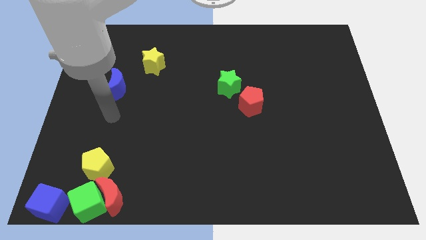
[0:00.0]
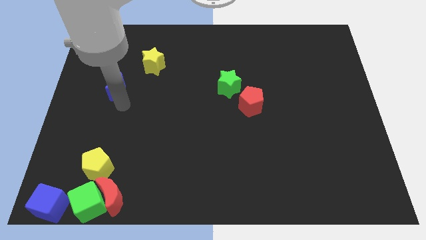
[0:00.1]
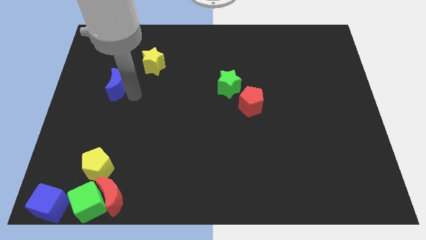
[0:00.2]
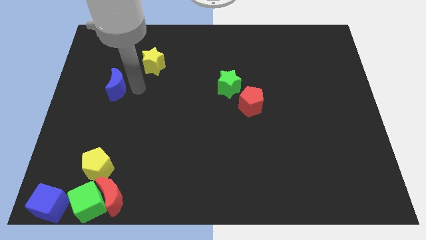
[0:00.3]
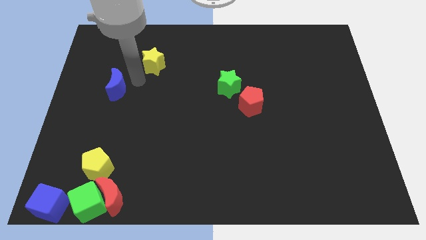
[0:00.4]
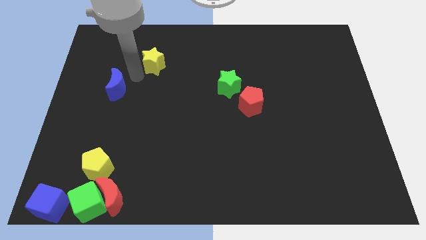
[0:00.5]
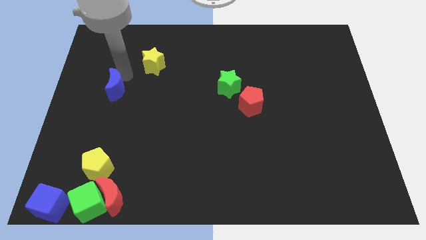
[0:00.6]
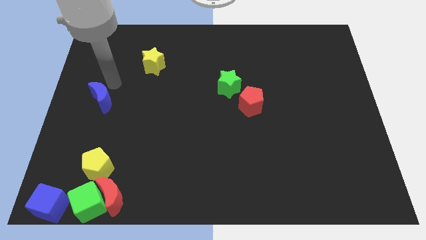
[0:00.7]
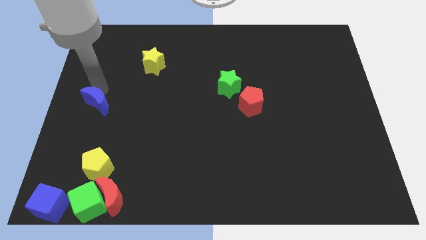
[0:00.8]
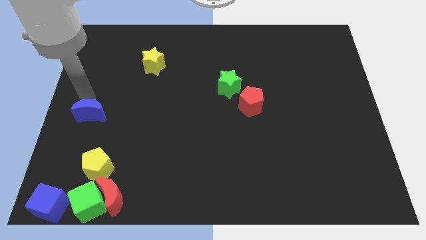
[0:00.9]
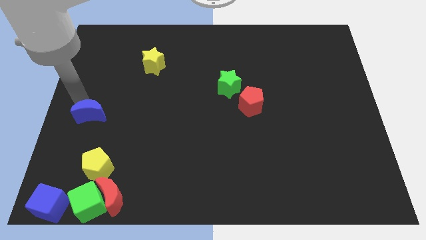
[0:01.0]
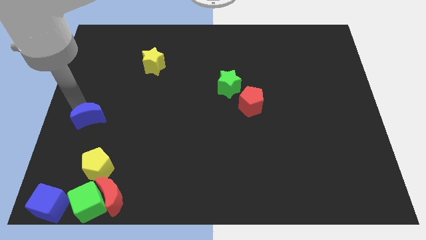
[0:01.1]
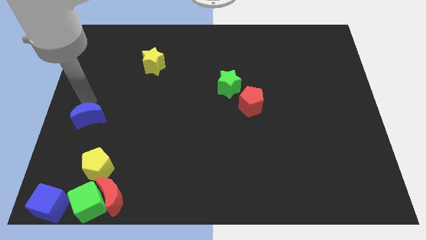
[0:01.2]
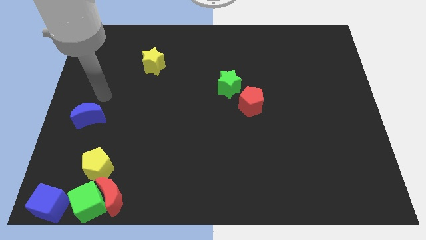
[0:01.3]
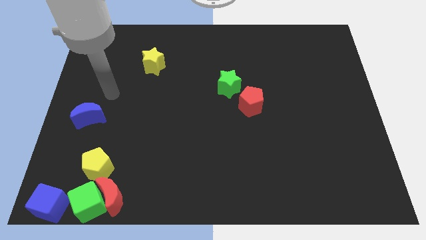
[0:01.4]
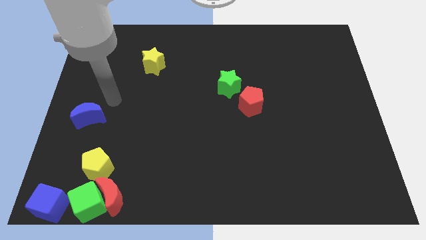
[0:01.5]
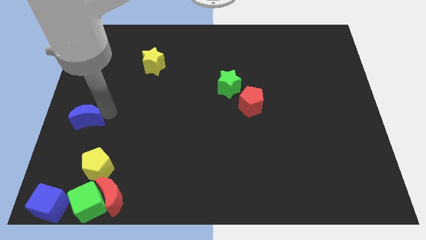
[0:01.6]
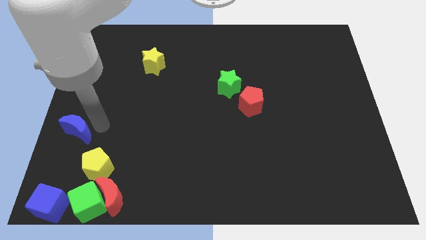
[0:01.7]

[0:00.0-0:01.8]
put the blue moon diagonally top left to the yellow pentagon

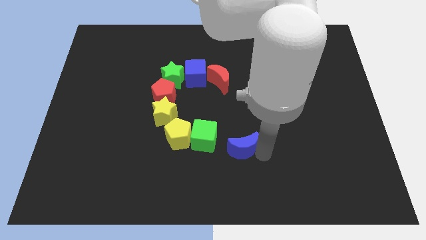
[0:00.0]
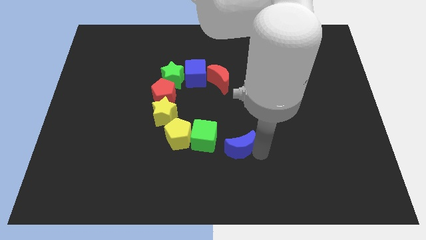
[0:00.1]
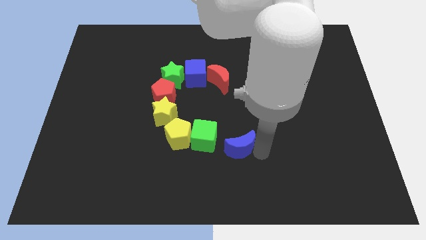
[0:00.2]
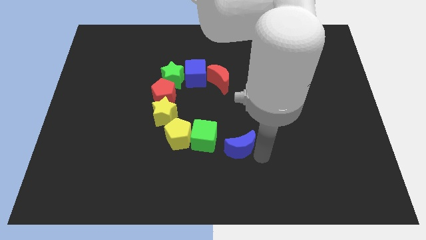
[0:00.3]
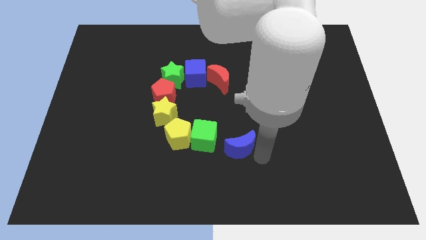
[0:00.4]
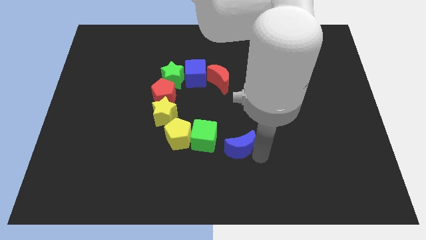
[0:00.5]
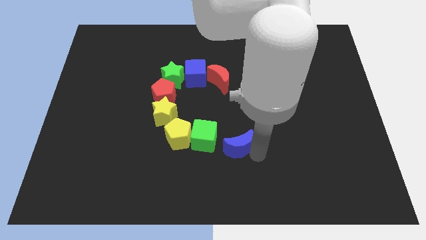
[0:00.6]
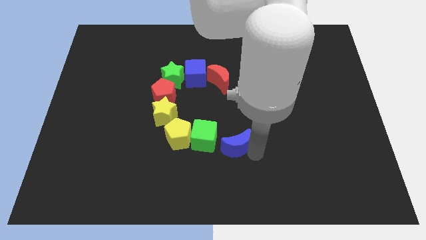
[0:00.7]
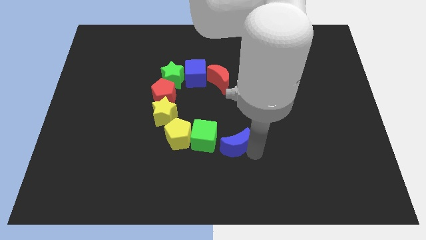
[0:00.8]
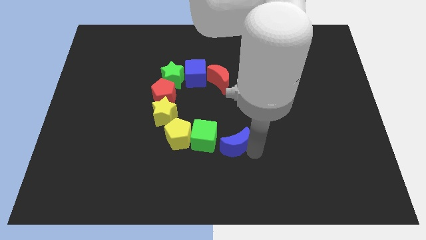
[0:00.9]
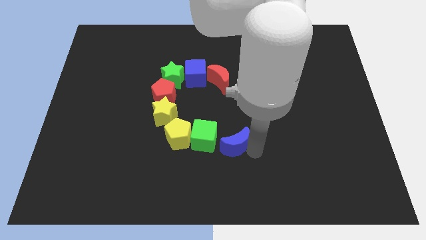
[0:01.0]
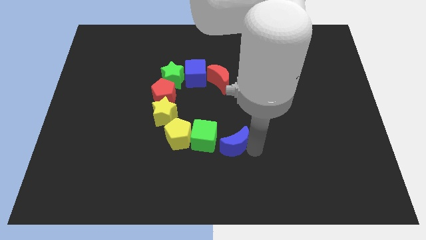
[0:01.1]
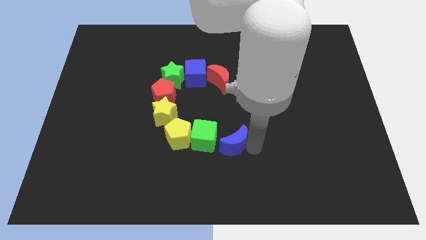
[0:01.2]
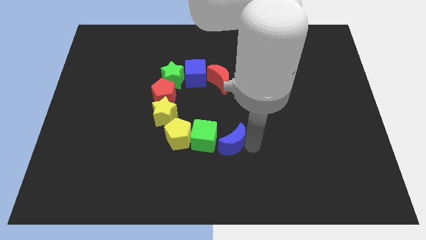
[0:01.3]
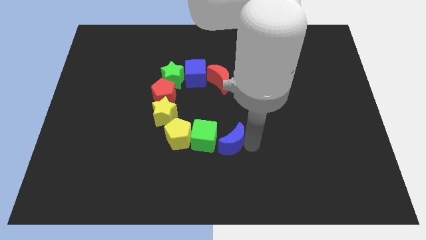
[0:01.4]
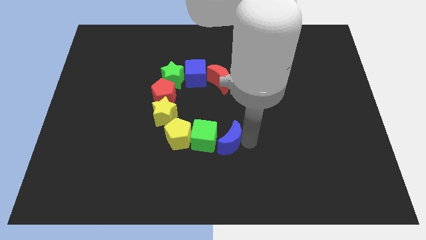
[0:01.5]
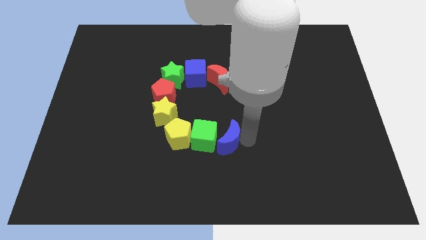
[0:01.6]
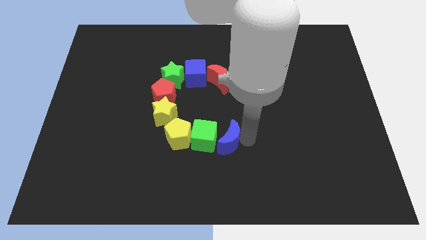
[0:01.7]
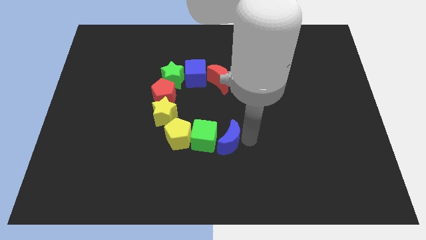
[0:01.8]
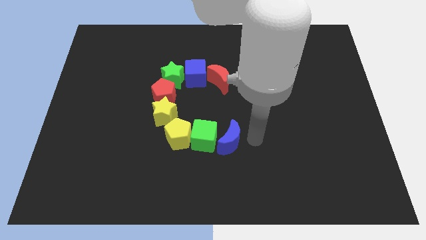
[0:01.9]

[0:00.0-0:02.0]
slide the blue moon to the right of the green cube

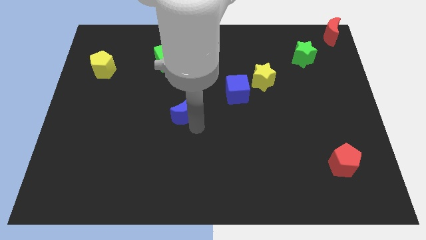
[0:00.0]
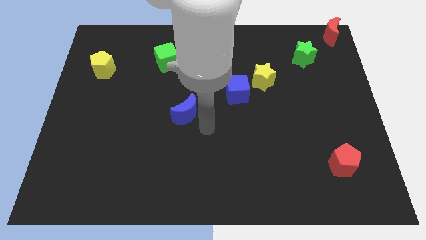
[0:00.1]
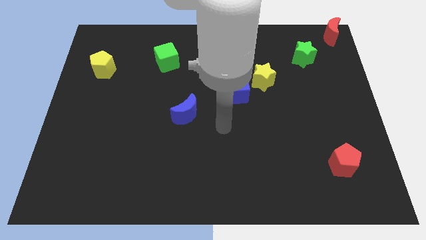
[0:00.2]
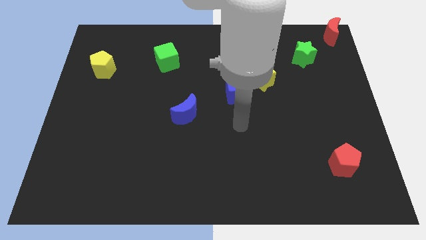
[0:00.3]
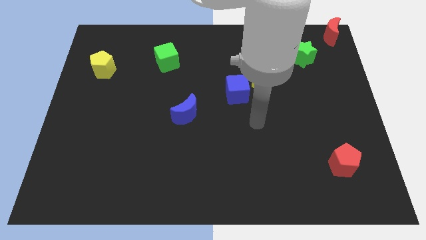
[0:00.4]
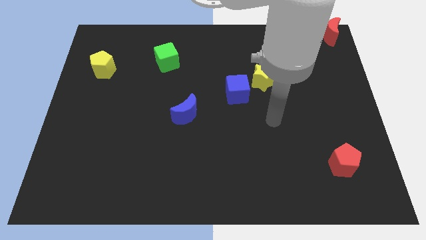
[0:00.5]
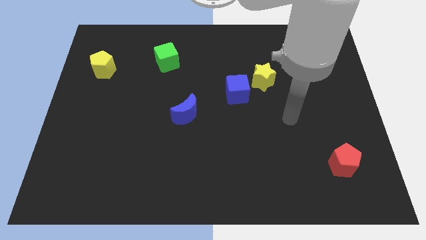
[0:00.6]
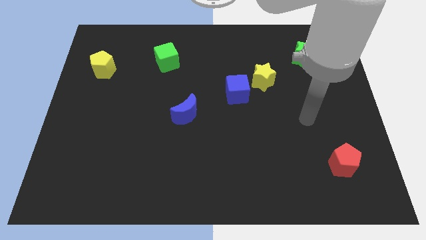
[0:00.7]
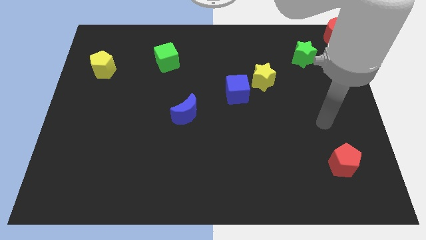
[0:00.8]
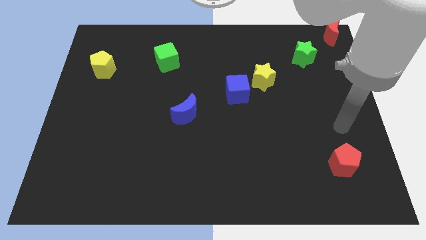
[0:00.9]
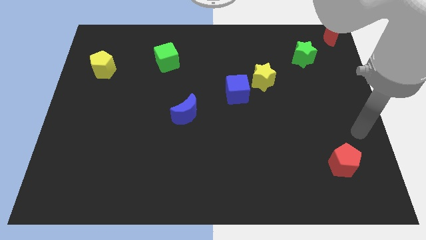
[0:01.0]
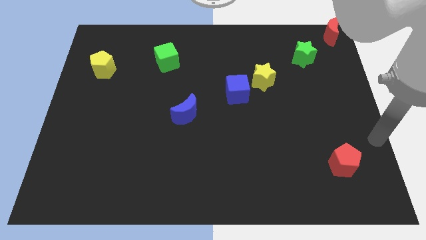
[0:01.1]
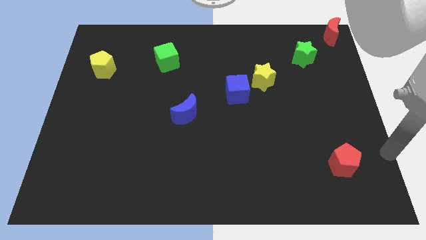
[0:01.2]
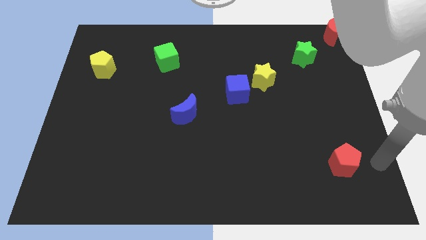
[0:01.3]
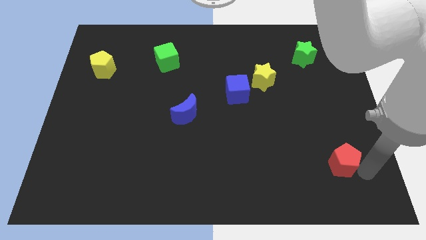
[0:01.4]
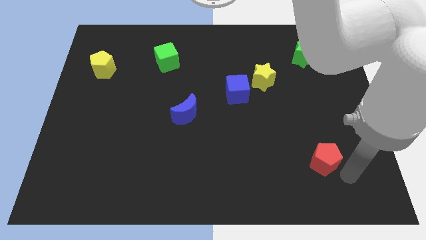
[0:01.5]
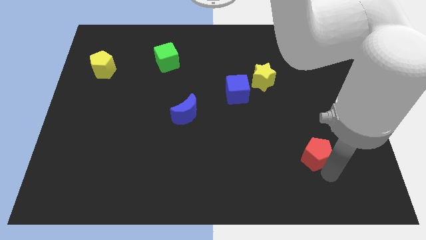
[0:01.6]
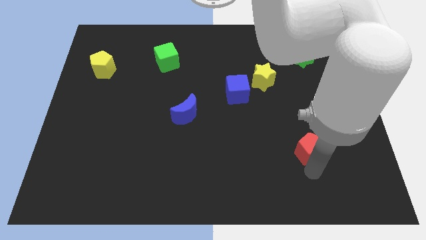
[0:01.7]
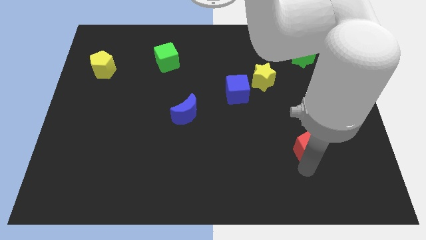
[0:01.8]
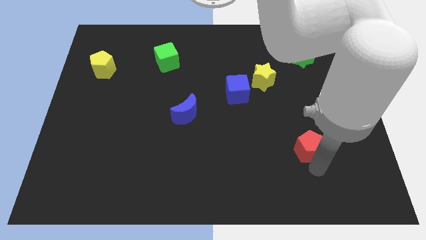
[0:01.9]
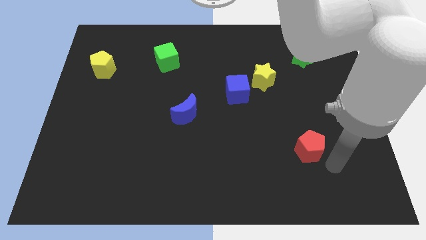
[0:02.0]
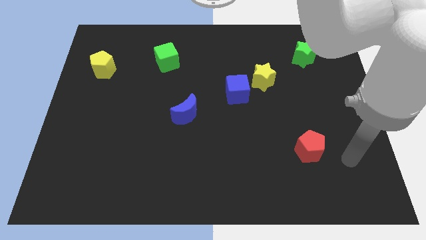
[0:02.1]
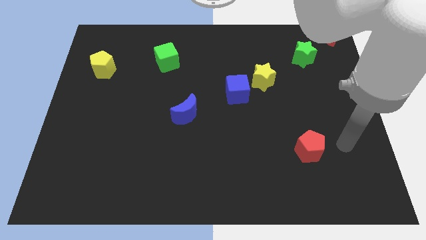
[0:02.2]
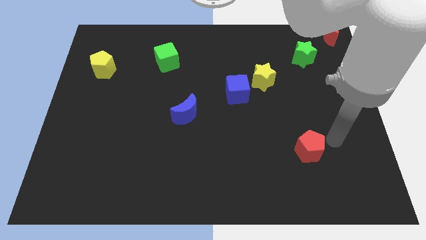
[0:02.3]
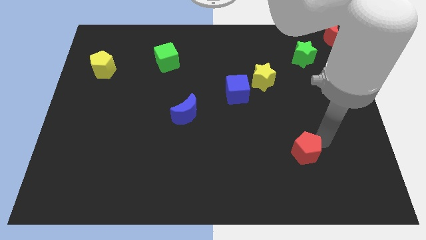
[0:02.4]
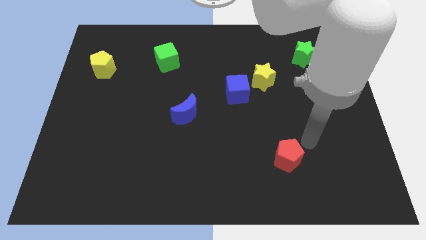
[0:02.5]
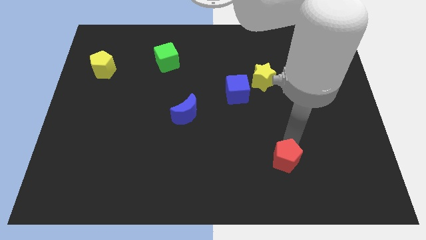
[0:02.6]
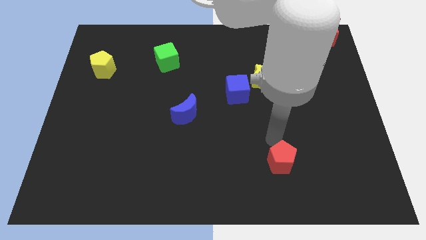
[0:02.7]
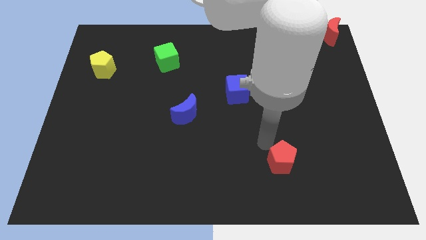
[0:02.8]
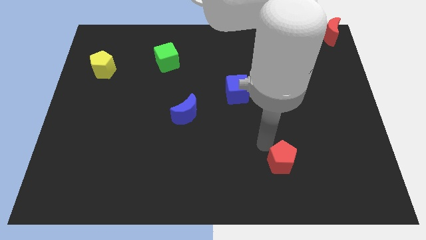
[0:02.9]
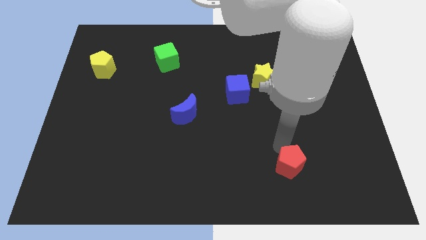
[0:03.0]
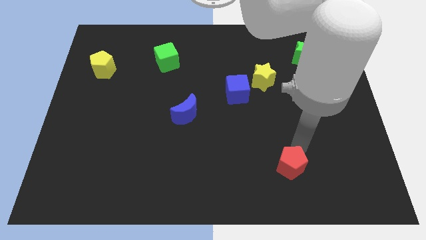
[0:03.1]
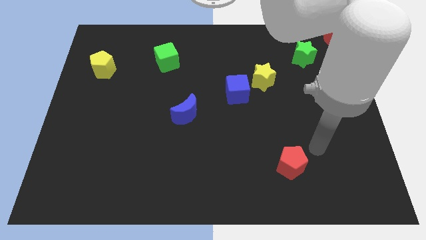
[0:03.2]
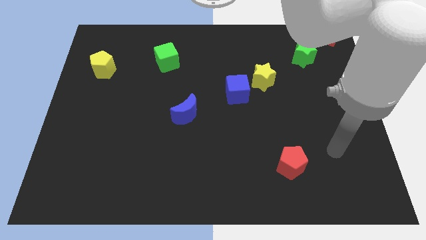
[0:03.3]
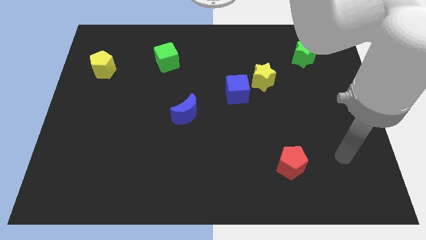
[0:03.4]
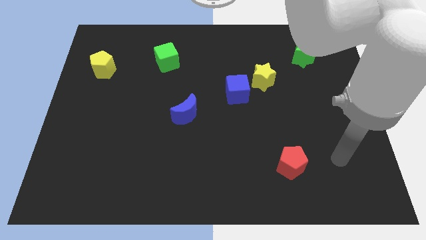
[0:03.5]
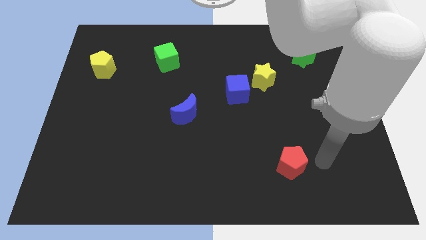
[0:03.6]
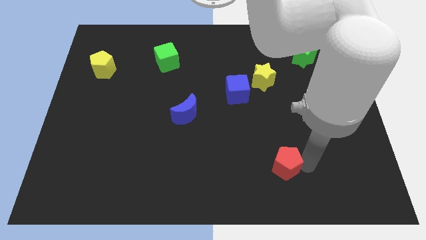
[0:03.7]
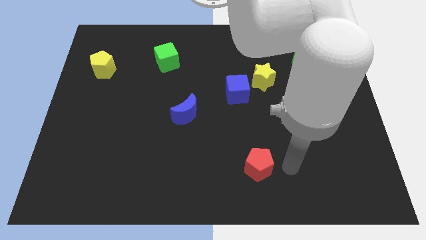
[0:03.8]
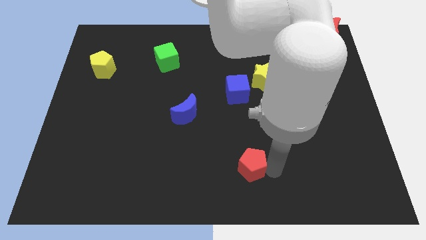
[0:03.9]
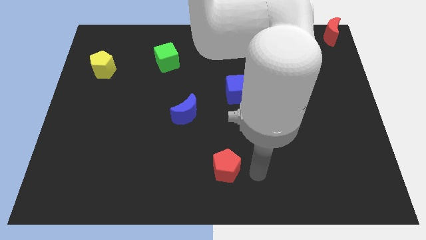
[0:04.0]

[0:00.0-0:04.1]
push the red pentagon towards left of the board

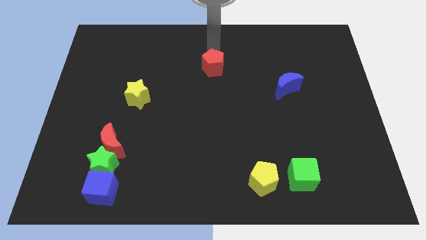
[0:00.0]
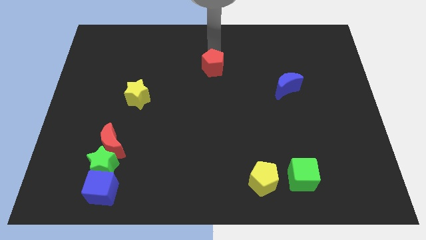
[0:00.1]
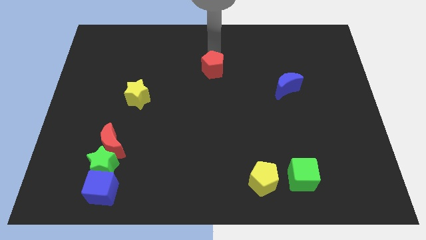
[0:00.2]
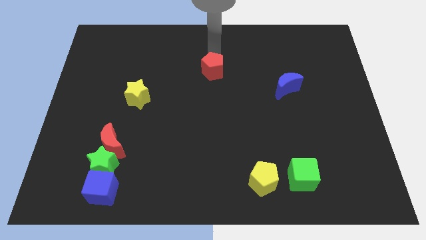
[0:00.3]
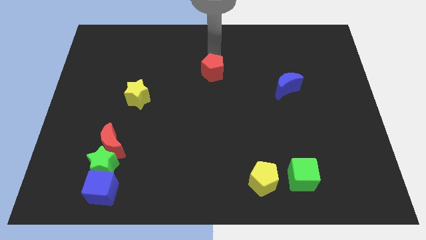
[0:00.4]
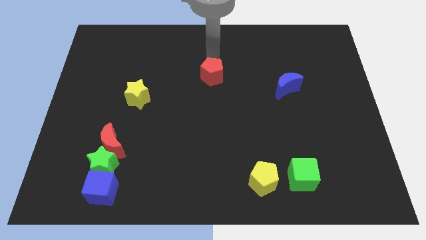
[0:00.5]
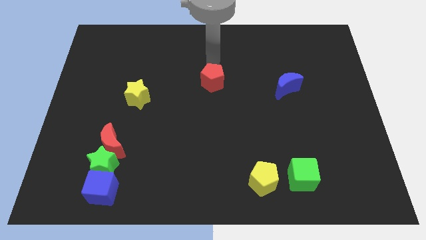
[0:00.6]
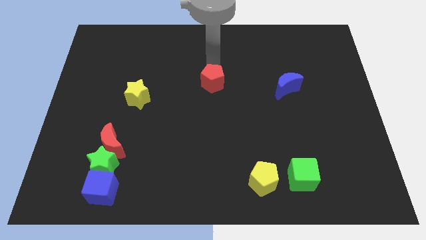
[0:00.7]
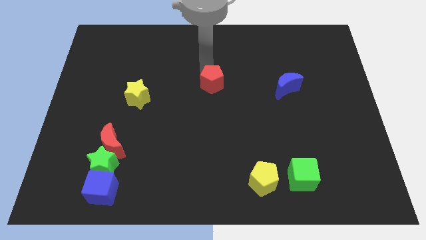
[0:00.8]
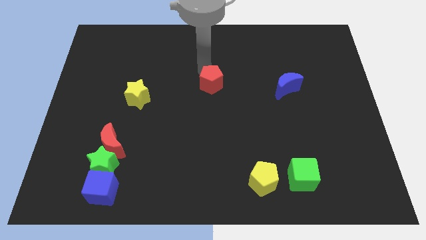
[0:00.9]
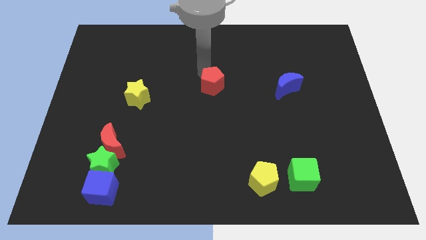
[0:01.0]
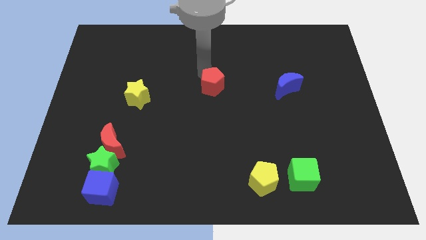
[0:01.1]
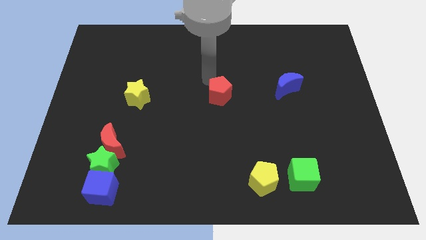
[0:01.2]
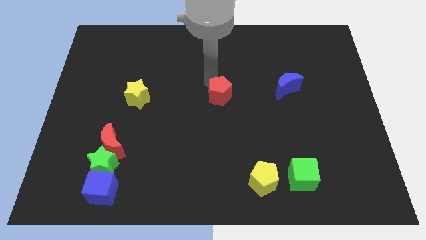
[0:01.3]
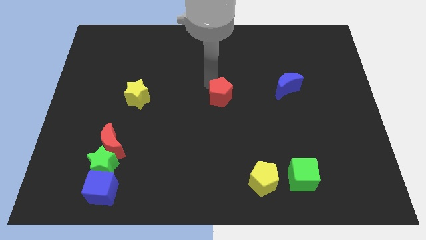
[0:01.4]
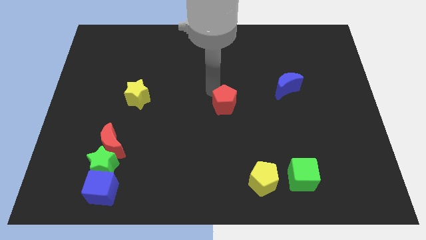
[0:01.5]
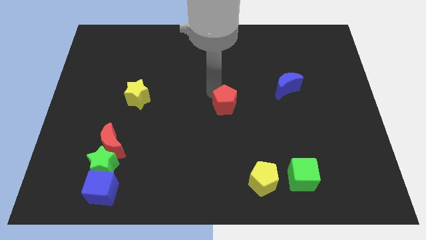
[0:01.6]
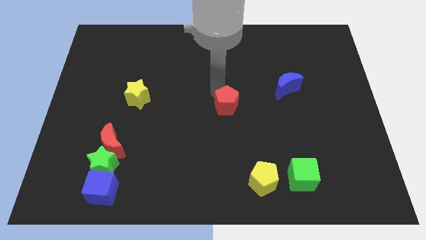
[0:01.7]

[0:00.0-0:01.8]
move the red pentagon towards the center of the board
